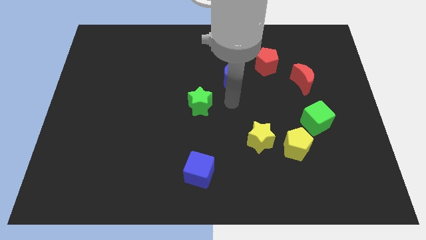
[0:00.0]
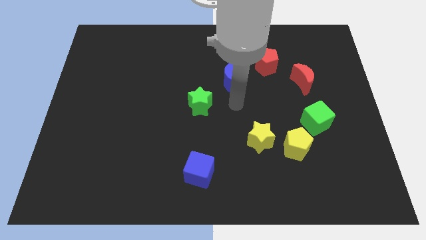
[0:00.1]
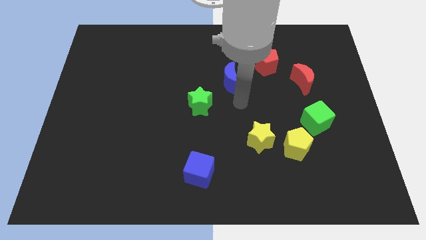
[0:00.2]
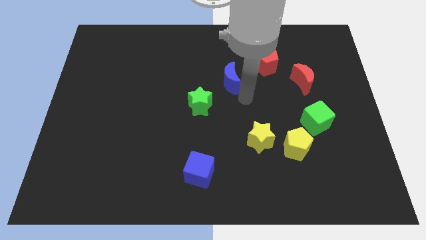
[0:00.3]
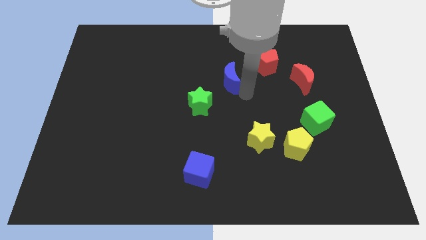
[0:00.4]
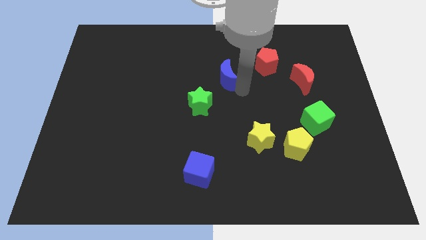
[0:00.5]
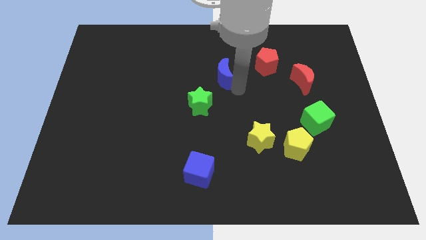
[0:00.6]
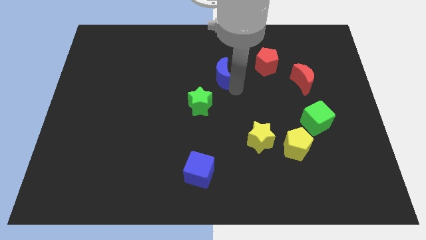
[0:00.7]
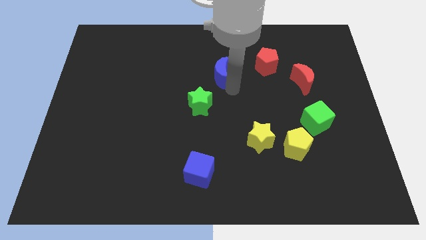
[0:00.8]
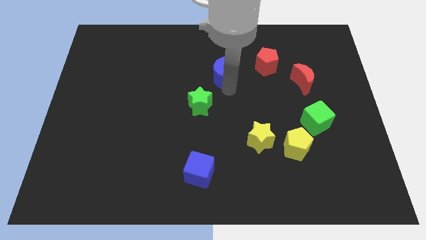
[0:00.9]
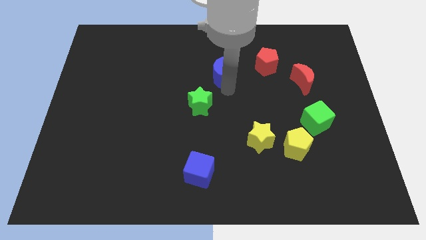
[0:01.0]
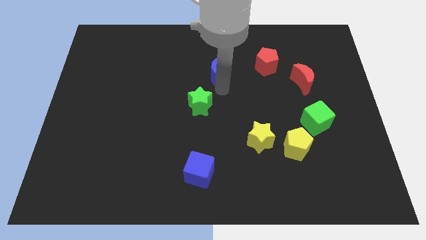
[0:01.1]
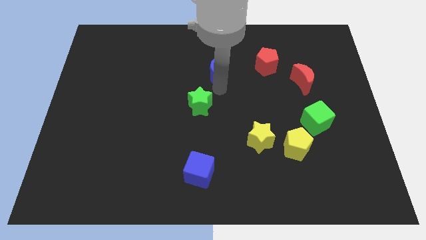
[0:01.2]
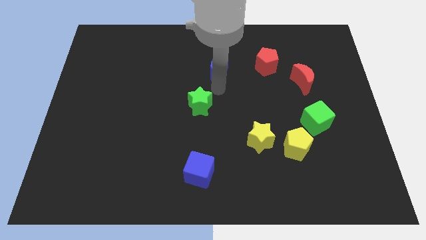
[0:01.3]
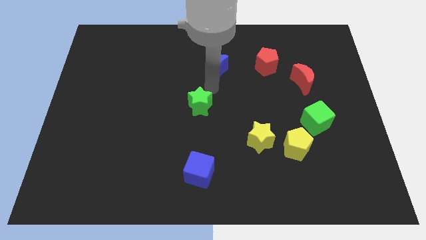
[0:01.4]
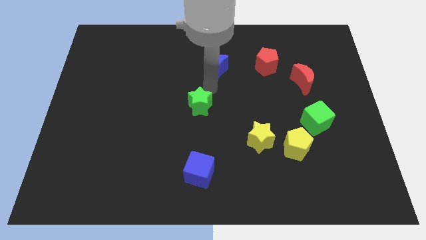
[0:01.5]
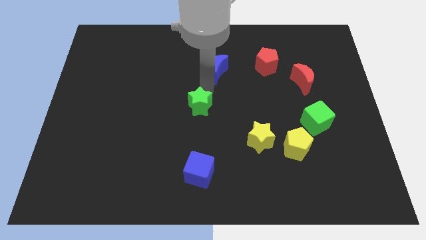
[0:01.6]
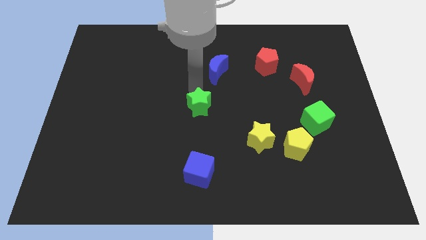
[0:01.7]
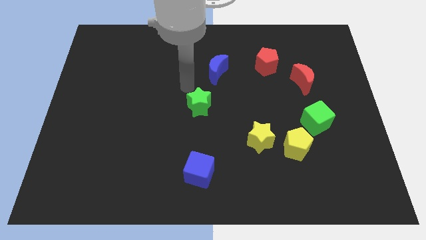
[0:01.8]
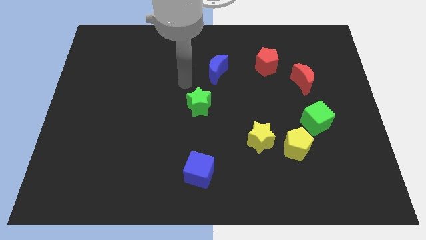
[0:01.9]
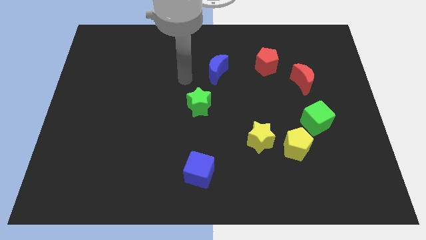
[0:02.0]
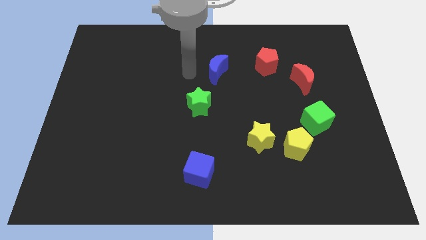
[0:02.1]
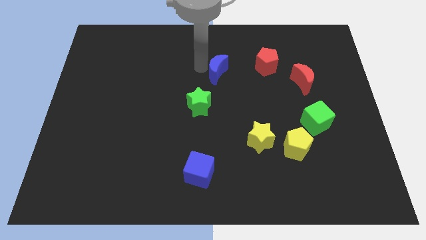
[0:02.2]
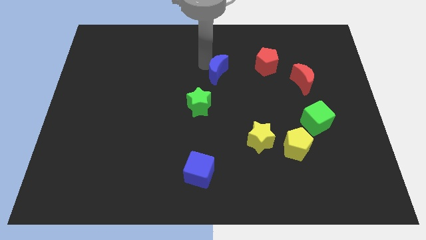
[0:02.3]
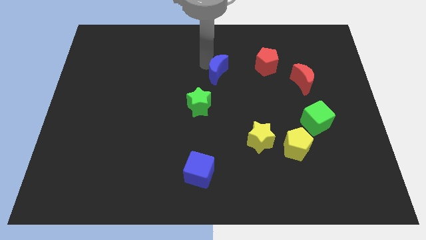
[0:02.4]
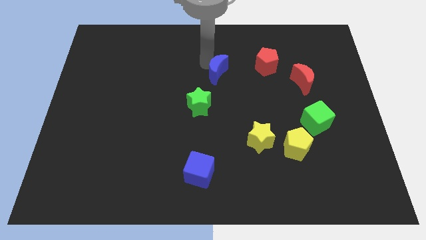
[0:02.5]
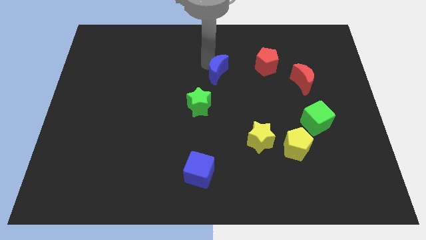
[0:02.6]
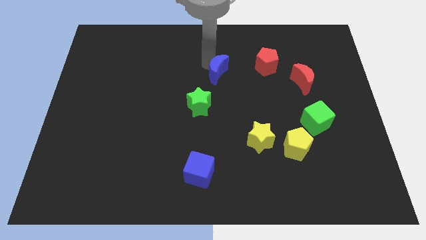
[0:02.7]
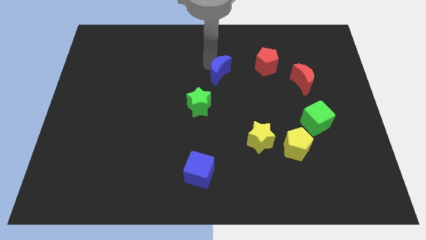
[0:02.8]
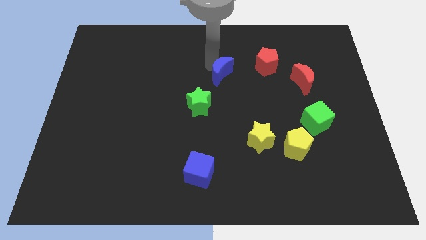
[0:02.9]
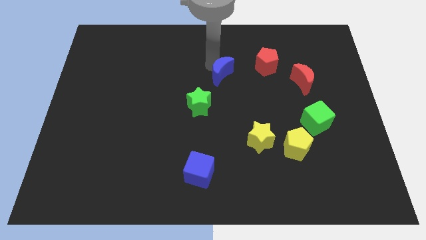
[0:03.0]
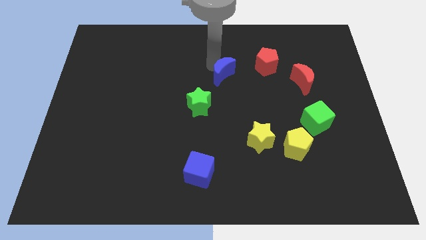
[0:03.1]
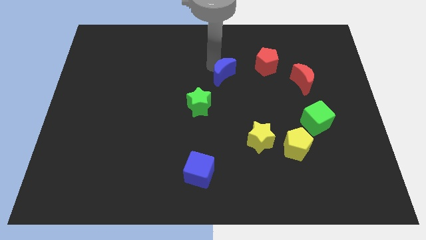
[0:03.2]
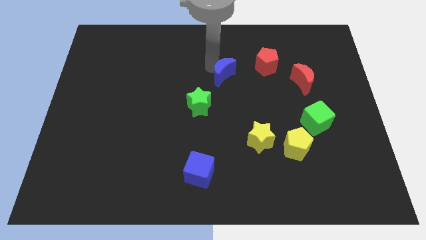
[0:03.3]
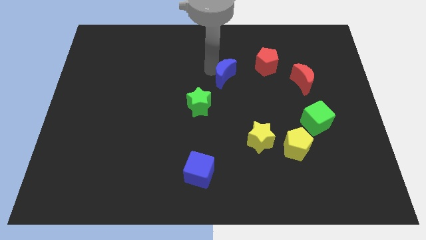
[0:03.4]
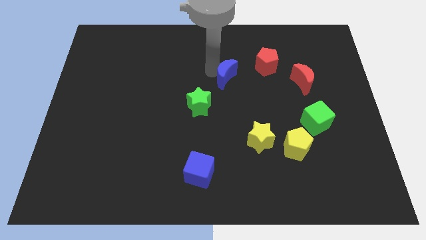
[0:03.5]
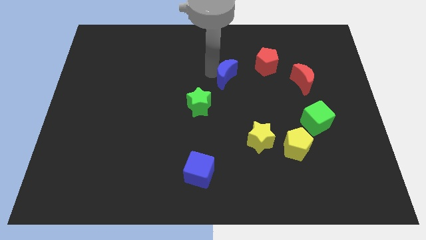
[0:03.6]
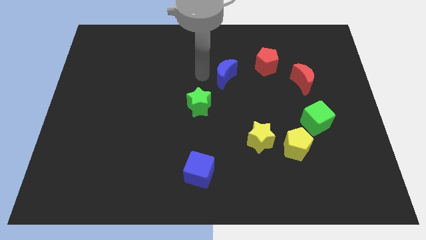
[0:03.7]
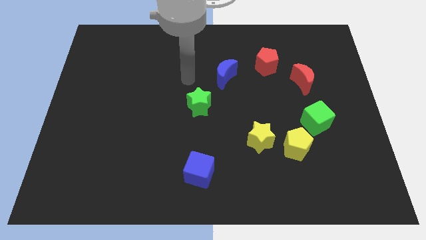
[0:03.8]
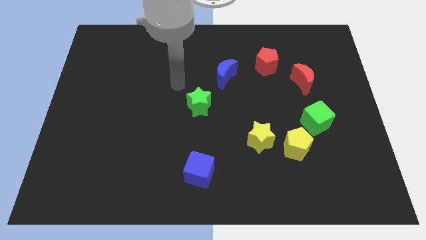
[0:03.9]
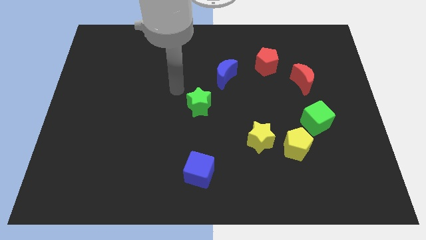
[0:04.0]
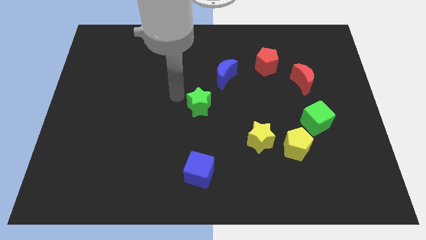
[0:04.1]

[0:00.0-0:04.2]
place blue moon to the bottom left of red pentagon

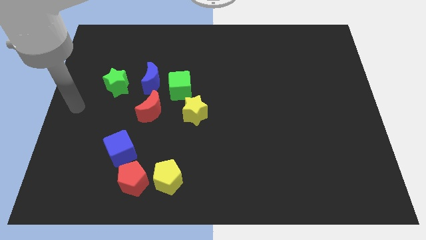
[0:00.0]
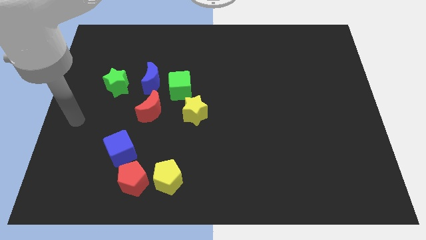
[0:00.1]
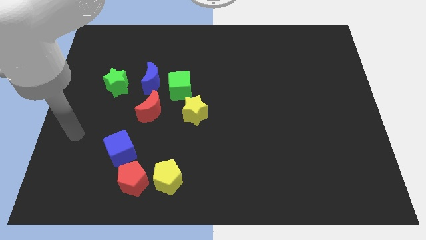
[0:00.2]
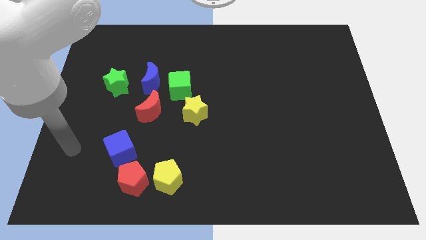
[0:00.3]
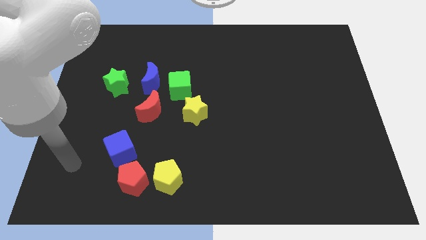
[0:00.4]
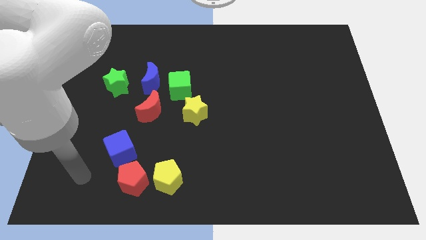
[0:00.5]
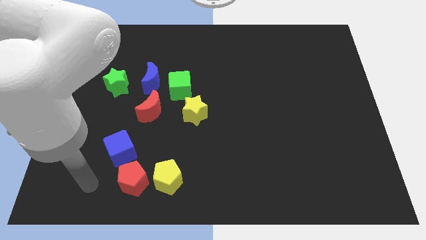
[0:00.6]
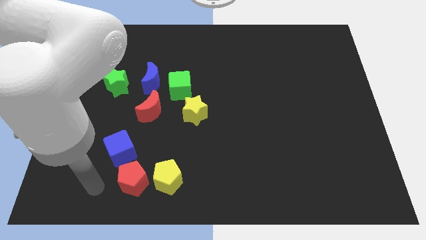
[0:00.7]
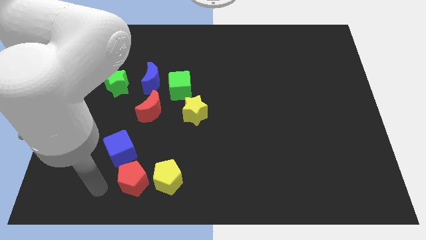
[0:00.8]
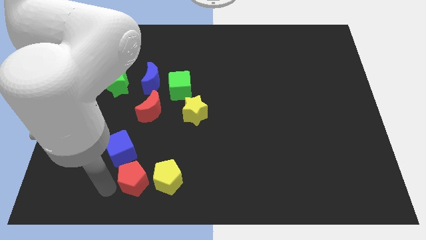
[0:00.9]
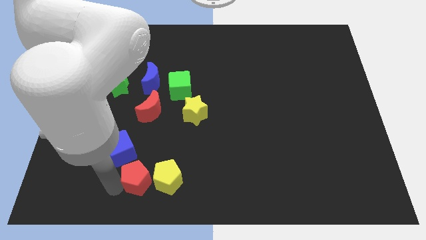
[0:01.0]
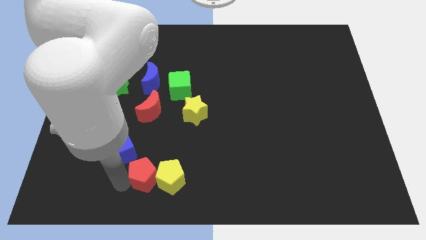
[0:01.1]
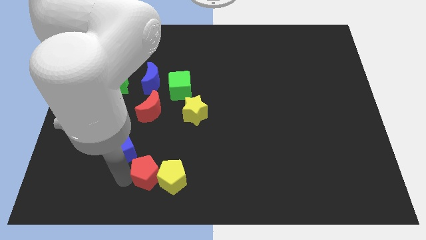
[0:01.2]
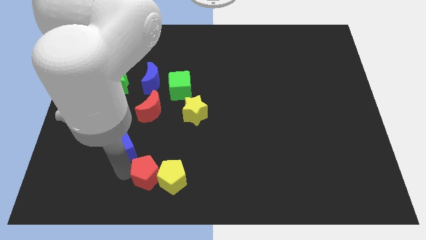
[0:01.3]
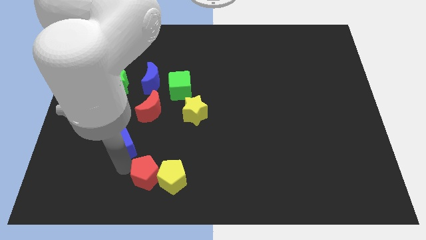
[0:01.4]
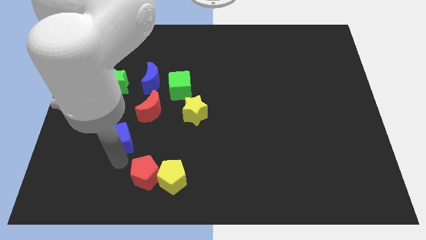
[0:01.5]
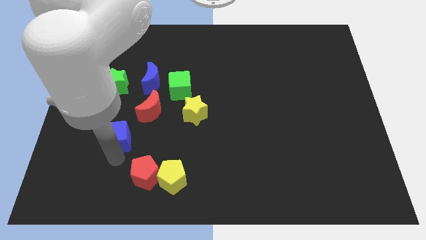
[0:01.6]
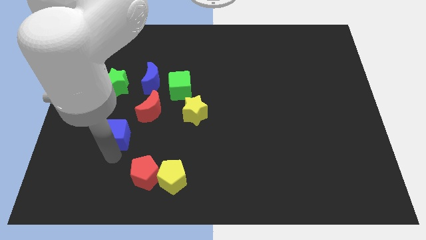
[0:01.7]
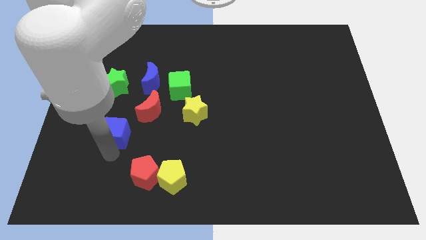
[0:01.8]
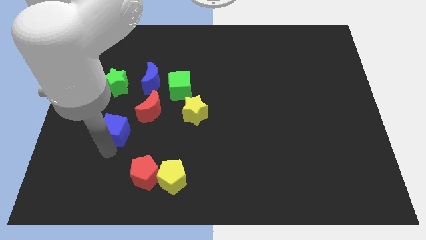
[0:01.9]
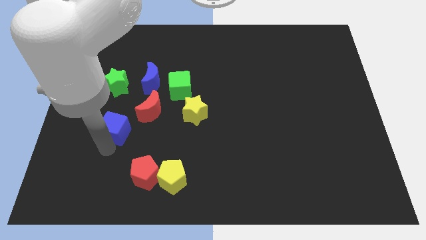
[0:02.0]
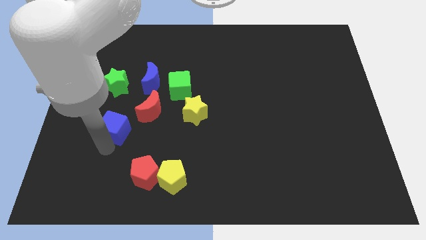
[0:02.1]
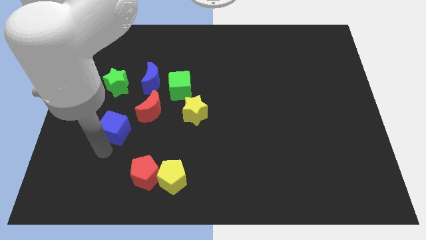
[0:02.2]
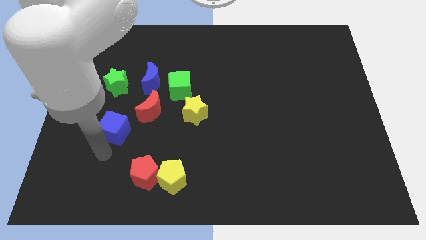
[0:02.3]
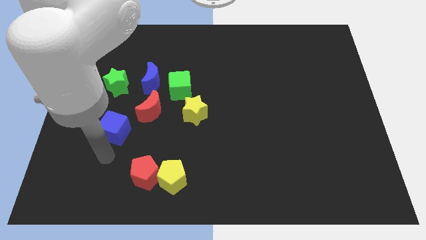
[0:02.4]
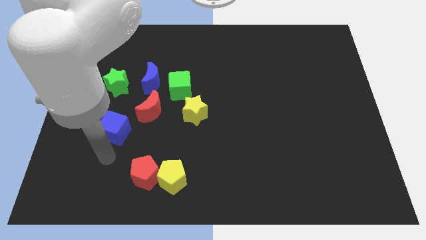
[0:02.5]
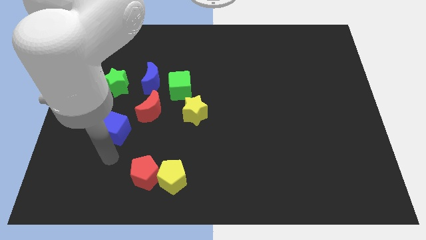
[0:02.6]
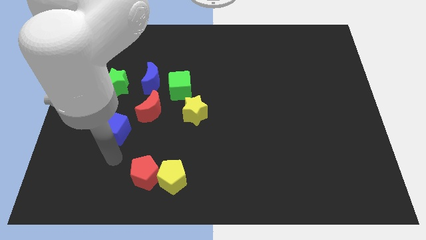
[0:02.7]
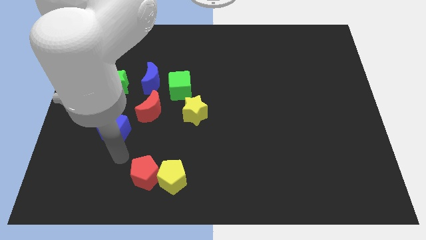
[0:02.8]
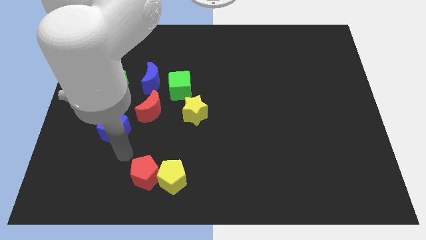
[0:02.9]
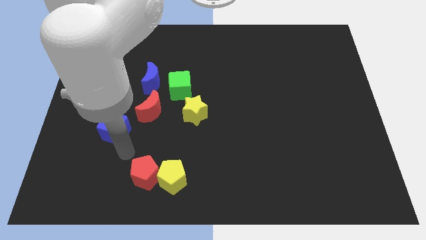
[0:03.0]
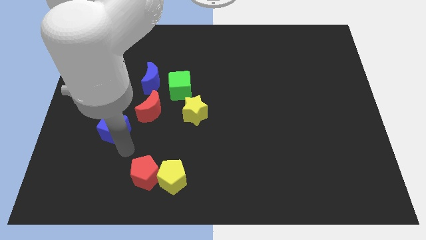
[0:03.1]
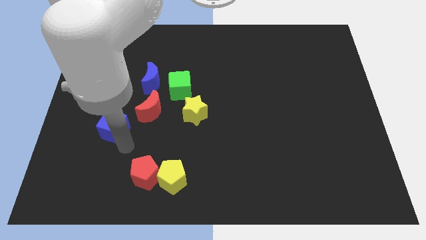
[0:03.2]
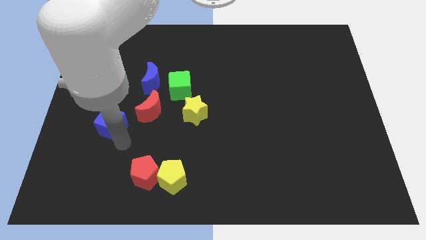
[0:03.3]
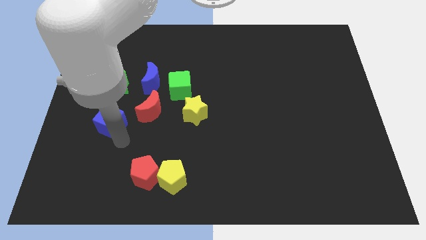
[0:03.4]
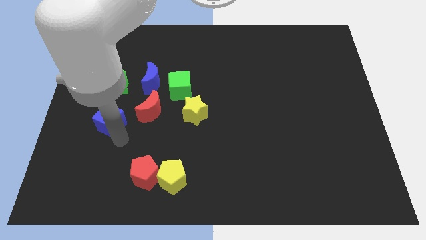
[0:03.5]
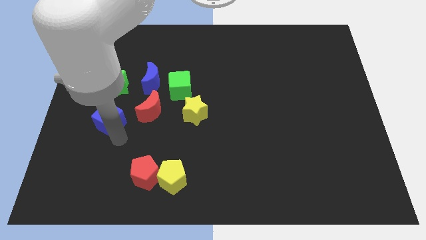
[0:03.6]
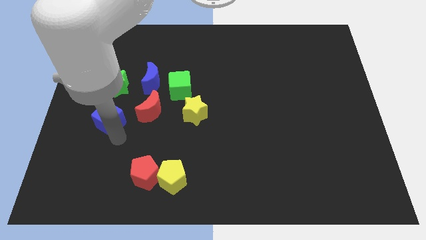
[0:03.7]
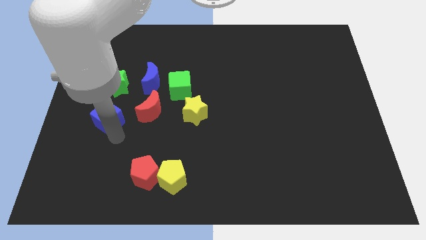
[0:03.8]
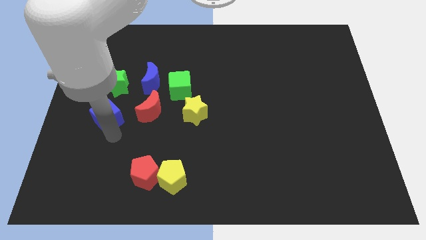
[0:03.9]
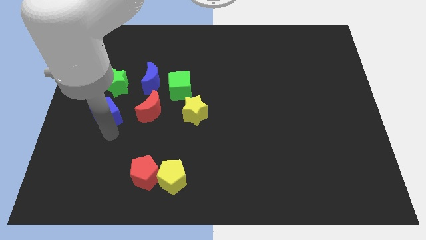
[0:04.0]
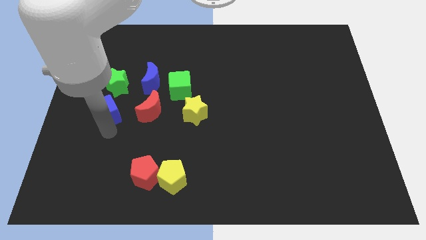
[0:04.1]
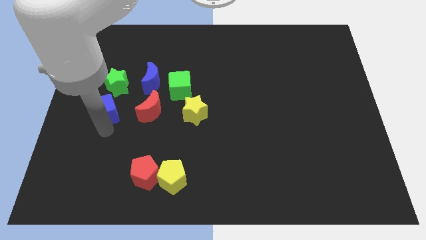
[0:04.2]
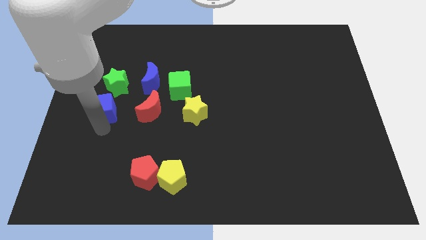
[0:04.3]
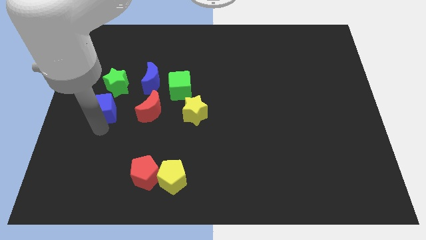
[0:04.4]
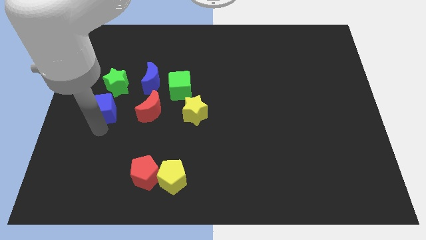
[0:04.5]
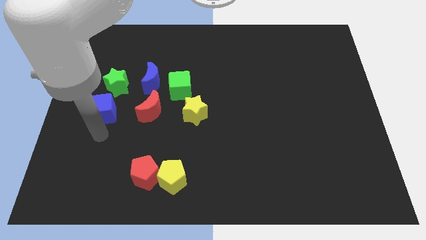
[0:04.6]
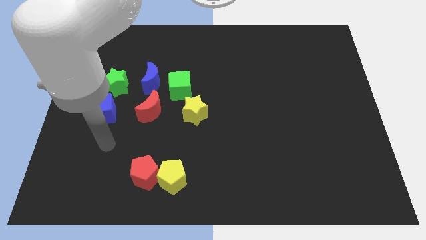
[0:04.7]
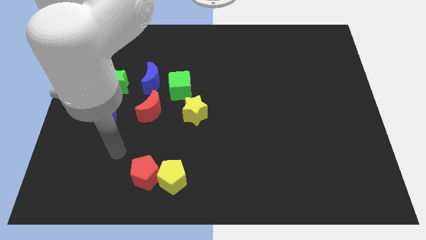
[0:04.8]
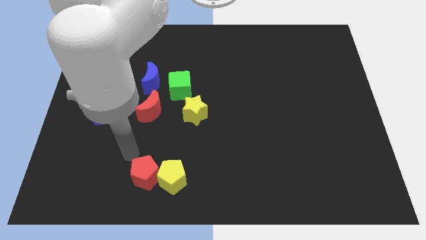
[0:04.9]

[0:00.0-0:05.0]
move the blue cube to the left of the red crescent
